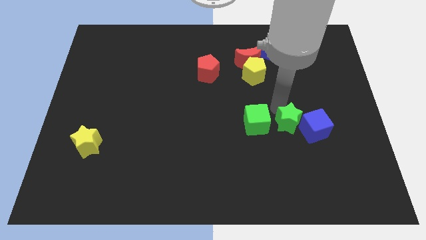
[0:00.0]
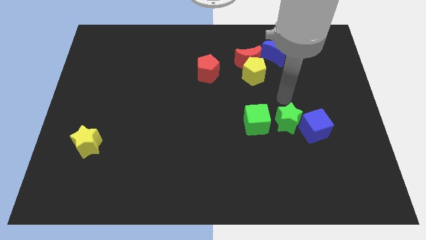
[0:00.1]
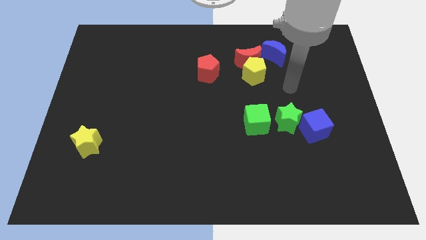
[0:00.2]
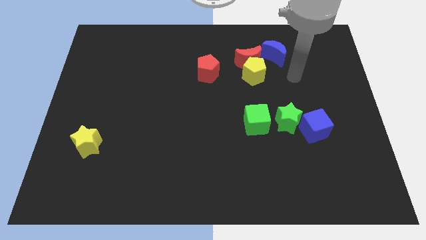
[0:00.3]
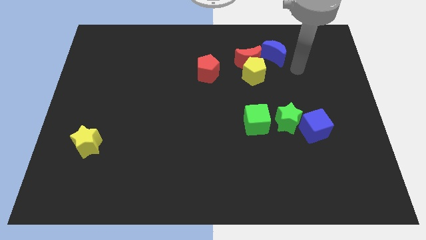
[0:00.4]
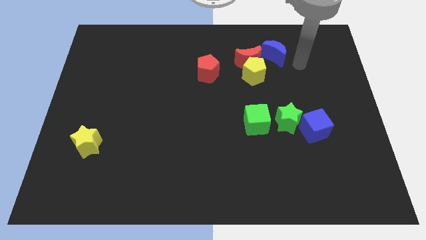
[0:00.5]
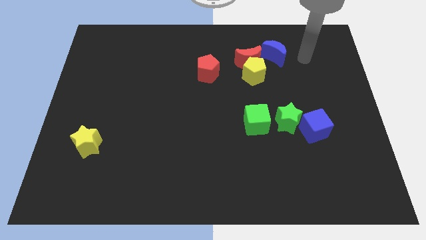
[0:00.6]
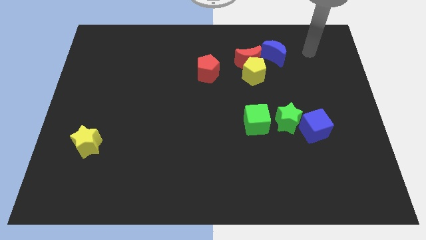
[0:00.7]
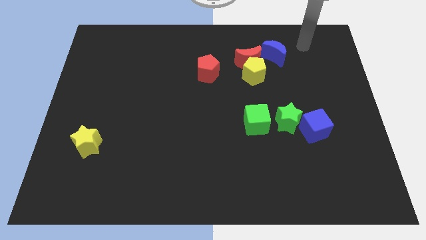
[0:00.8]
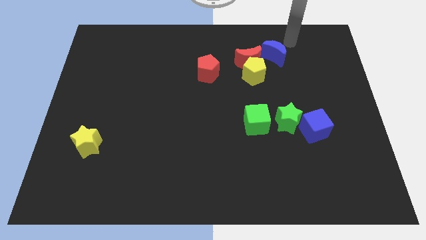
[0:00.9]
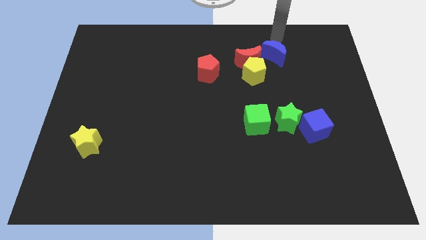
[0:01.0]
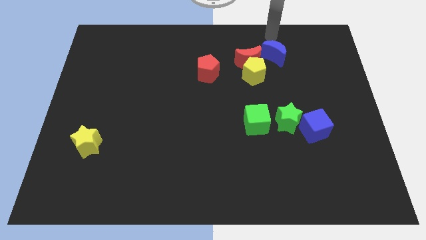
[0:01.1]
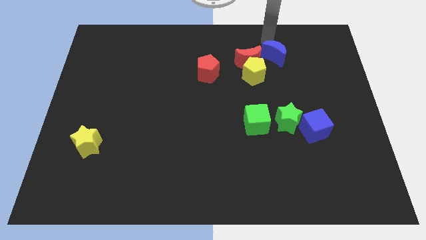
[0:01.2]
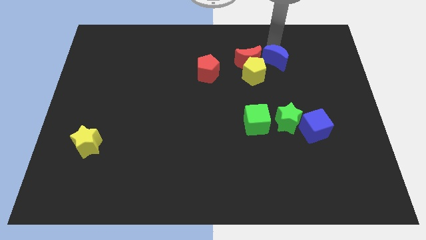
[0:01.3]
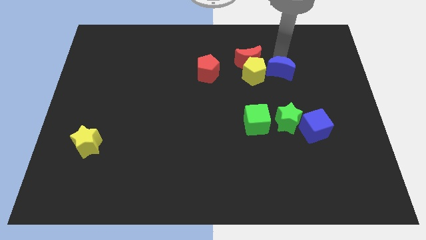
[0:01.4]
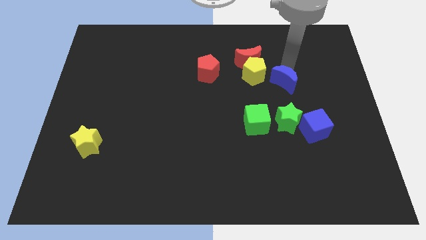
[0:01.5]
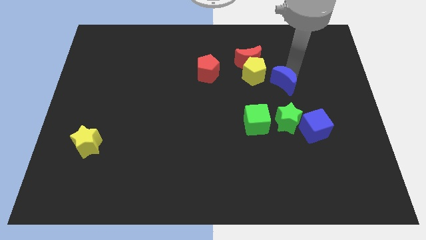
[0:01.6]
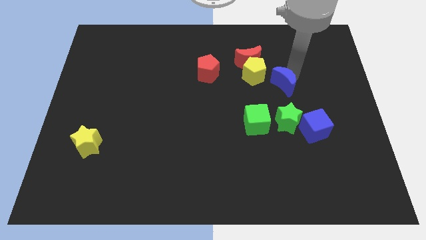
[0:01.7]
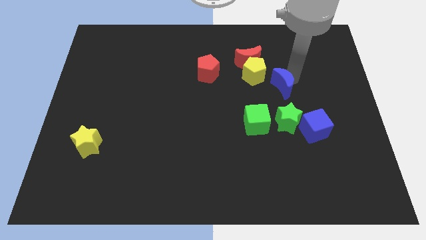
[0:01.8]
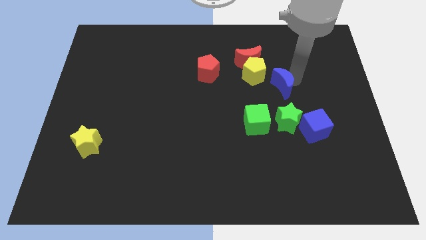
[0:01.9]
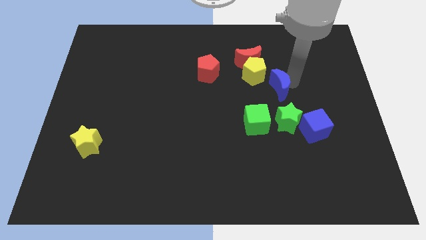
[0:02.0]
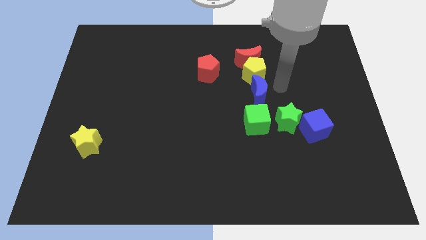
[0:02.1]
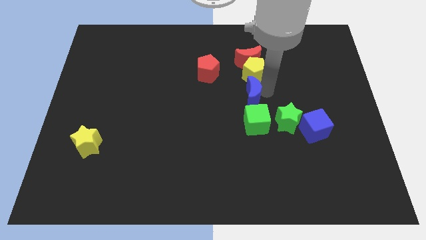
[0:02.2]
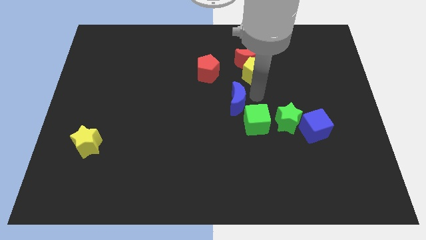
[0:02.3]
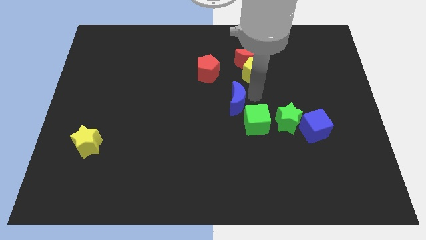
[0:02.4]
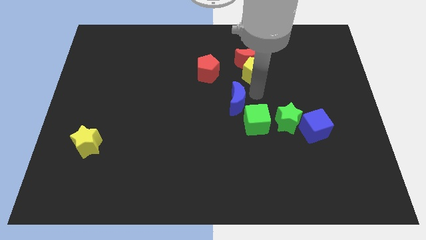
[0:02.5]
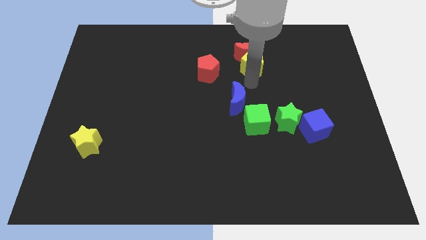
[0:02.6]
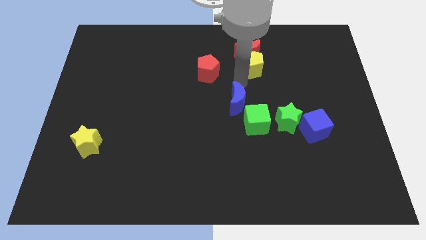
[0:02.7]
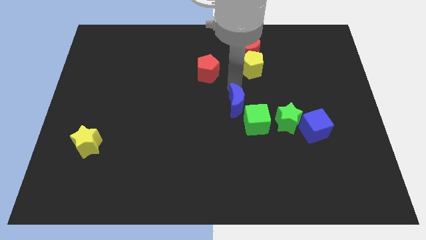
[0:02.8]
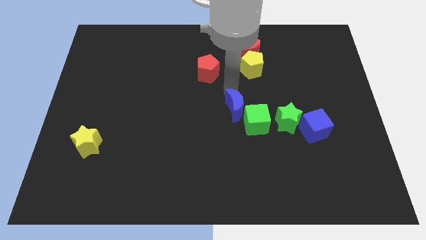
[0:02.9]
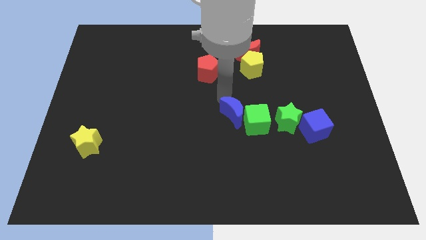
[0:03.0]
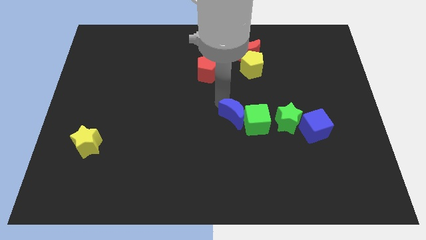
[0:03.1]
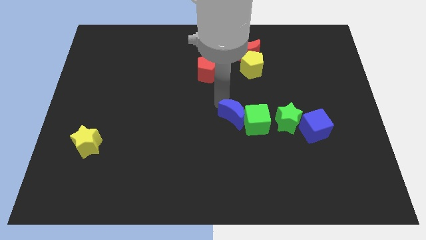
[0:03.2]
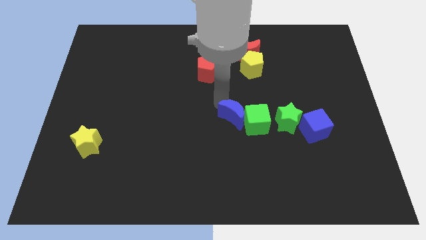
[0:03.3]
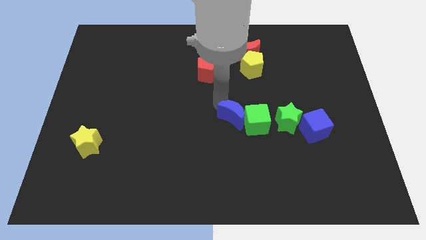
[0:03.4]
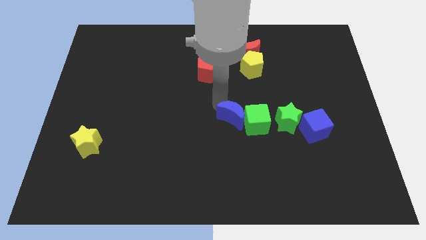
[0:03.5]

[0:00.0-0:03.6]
move the blue crescent left to the green cube

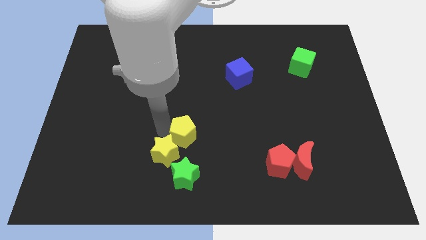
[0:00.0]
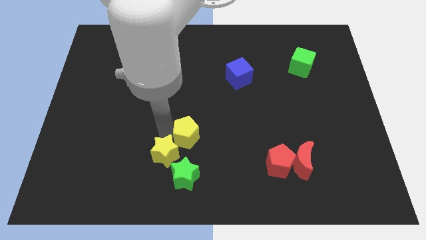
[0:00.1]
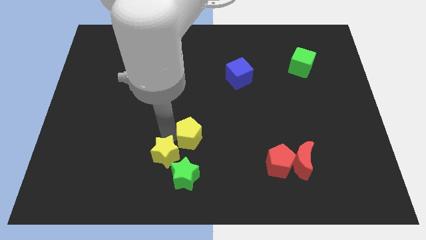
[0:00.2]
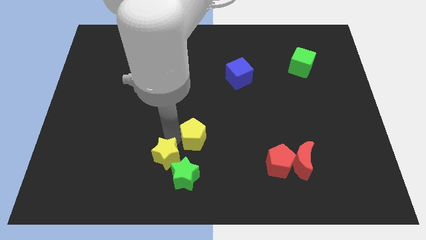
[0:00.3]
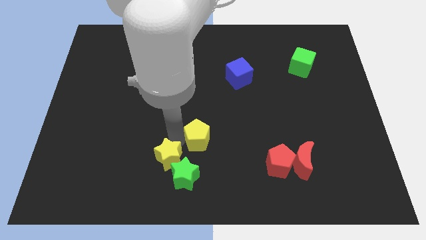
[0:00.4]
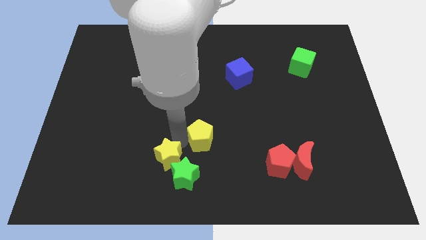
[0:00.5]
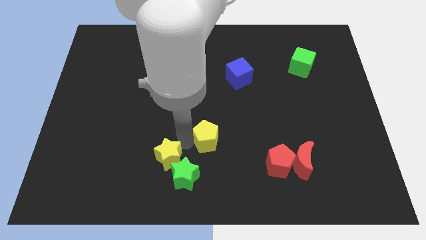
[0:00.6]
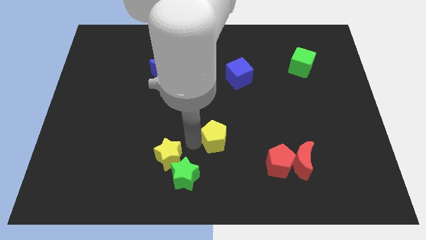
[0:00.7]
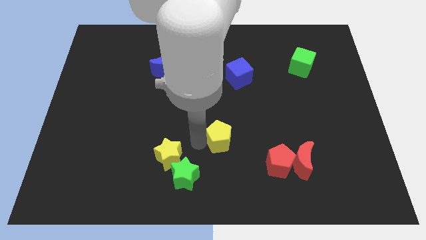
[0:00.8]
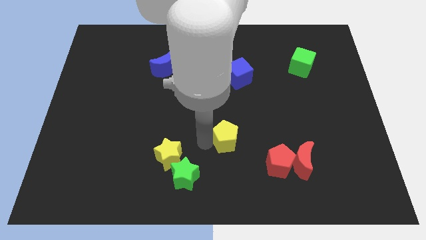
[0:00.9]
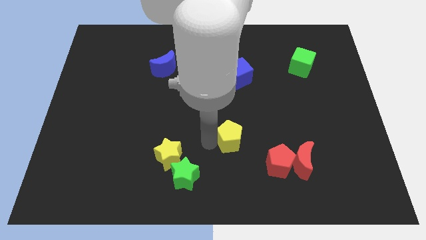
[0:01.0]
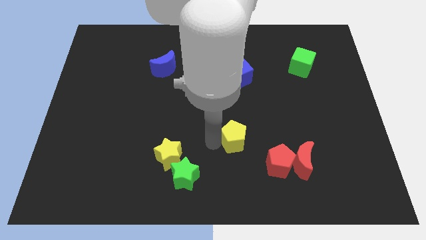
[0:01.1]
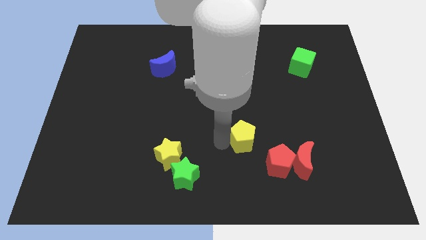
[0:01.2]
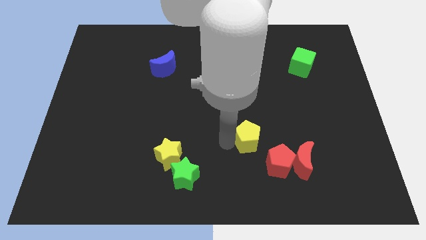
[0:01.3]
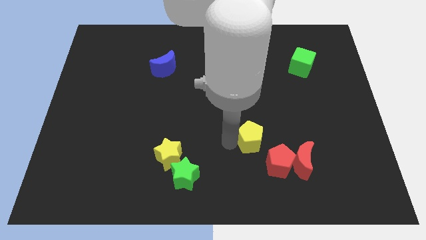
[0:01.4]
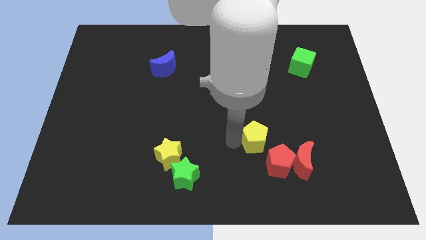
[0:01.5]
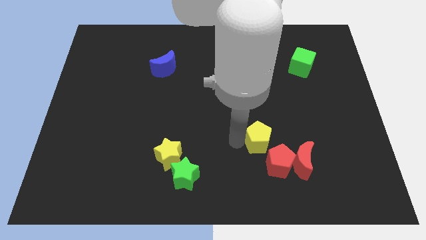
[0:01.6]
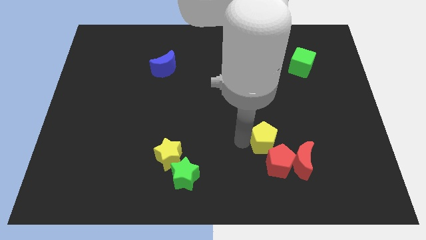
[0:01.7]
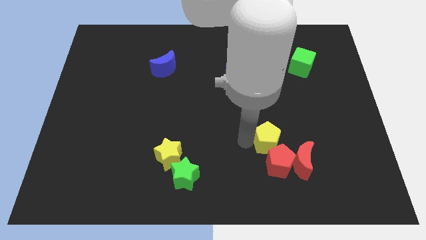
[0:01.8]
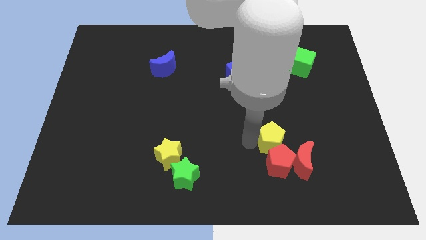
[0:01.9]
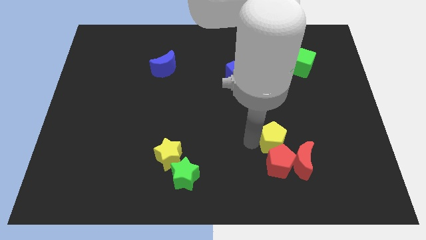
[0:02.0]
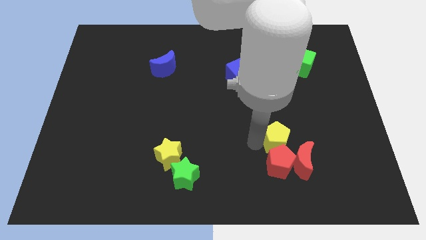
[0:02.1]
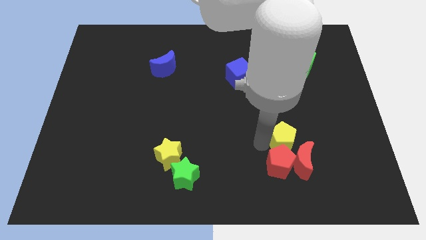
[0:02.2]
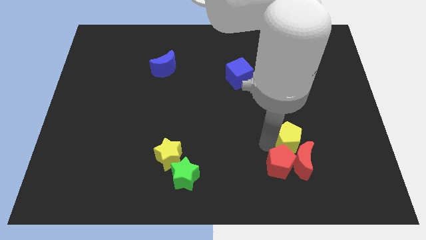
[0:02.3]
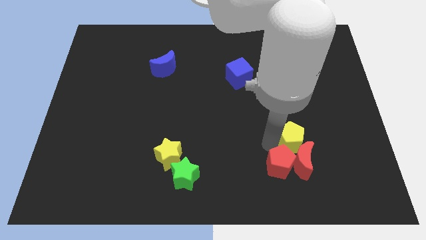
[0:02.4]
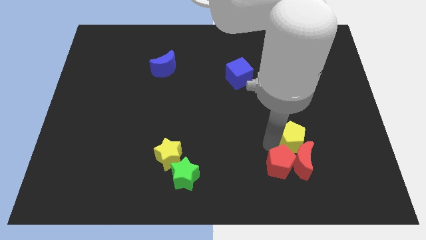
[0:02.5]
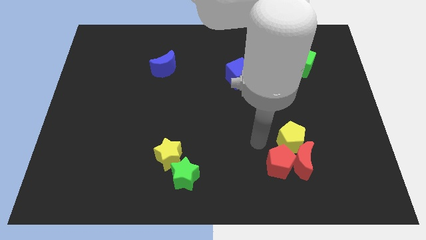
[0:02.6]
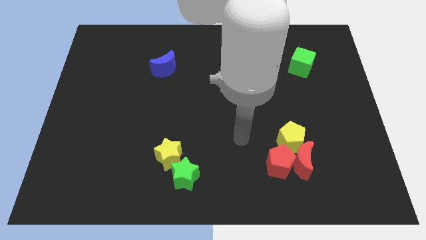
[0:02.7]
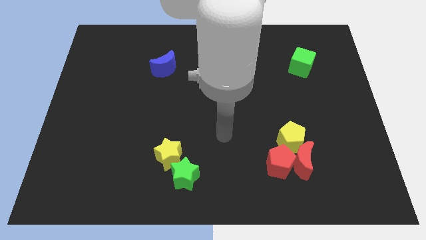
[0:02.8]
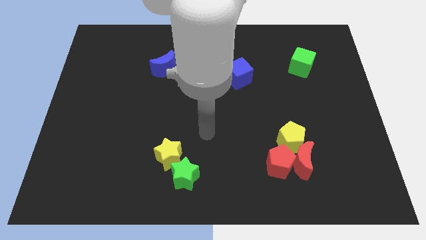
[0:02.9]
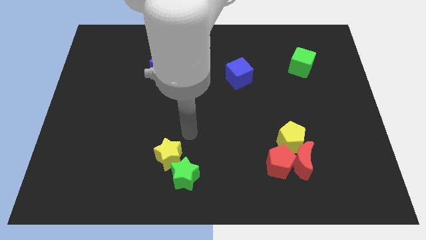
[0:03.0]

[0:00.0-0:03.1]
push the yellow pentagon to the top of the red blocks

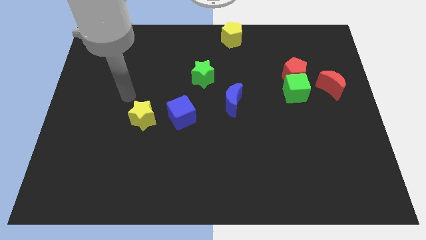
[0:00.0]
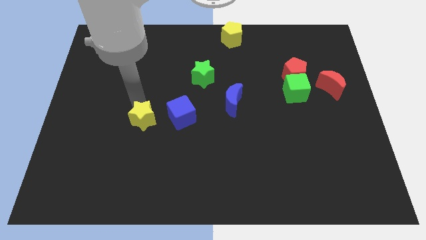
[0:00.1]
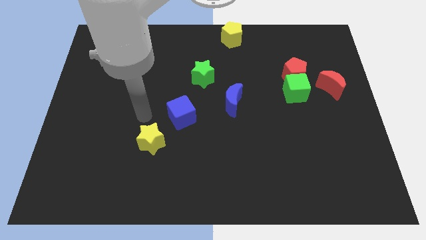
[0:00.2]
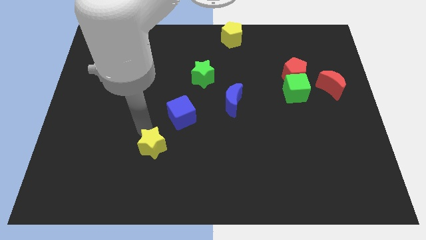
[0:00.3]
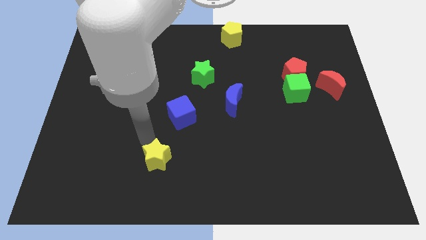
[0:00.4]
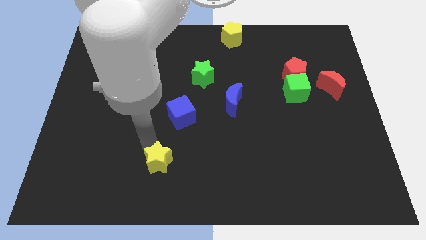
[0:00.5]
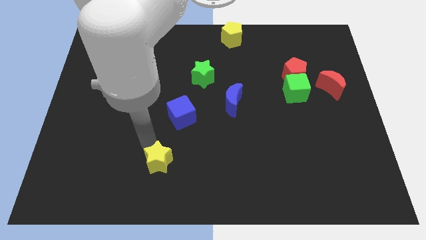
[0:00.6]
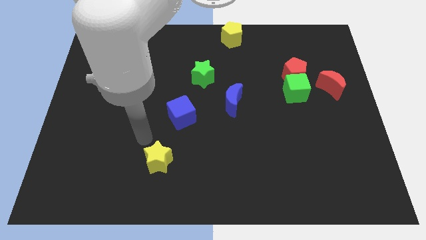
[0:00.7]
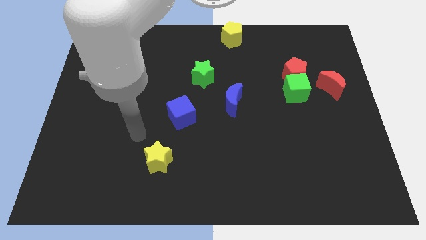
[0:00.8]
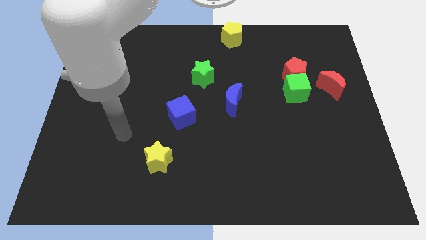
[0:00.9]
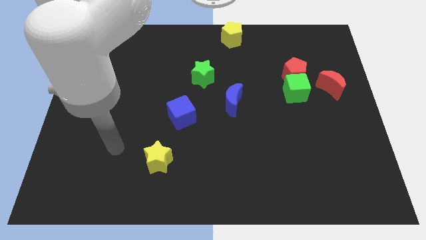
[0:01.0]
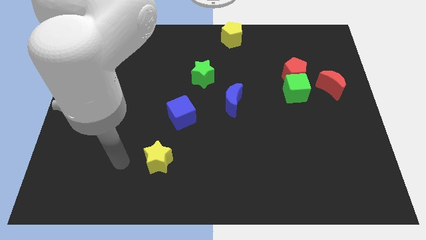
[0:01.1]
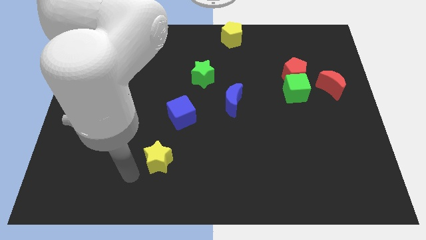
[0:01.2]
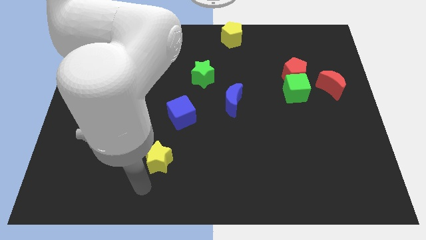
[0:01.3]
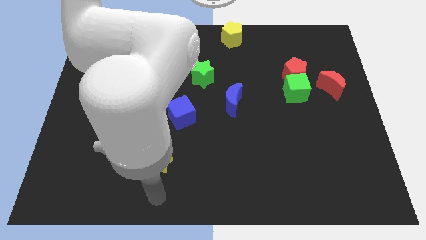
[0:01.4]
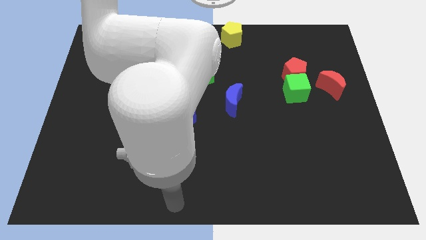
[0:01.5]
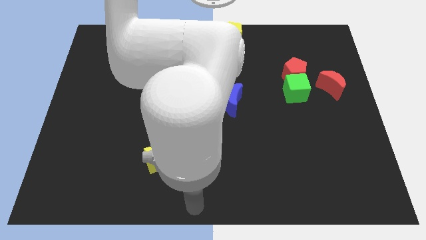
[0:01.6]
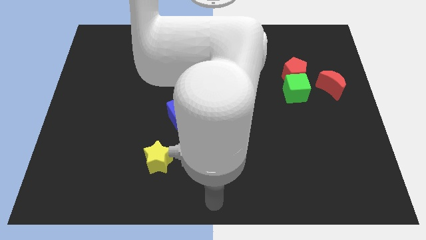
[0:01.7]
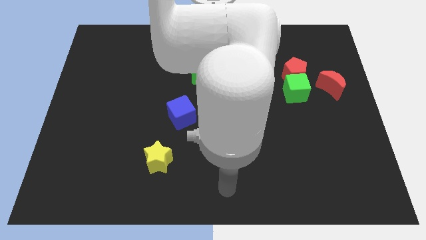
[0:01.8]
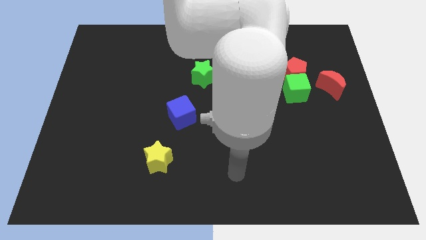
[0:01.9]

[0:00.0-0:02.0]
push the yellow star towards the bottom side

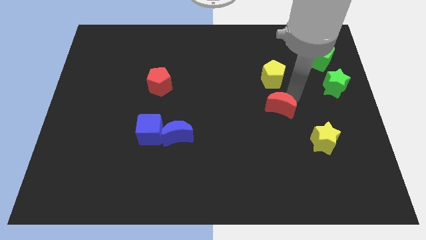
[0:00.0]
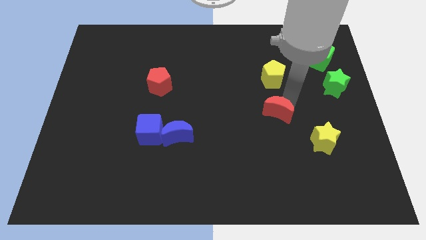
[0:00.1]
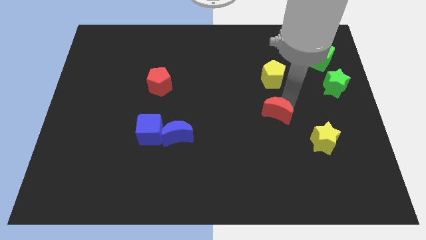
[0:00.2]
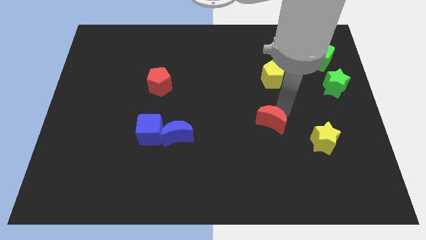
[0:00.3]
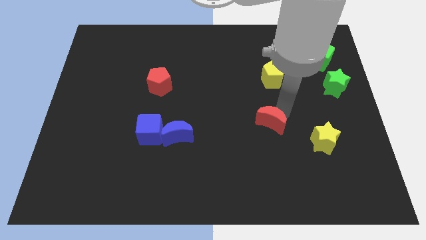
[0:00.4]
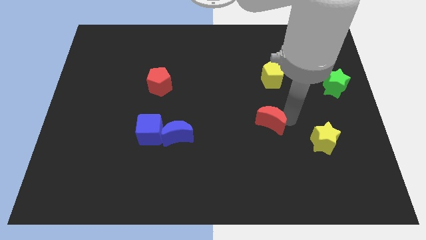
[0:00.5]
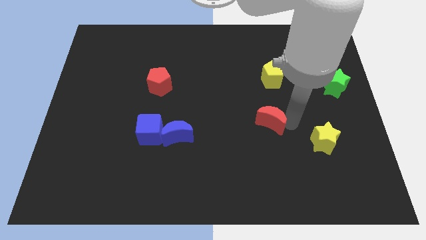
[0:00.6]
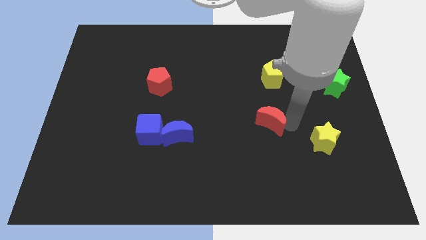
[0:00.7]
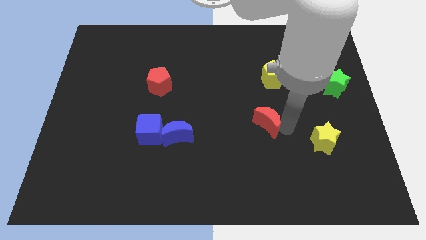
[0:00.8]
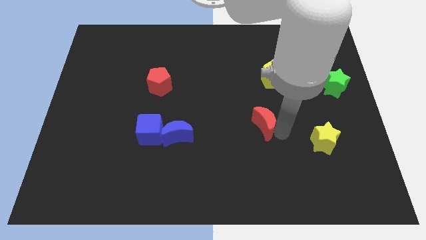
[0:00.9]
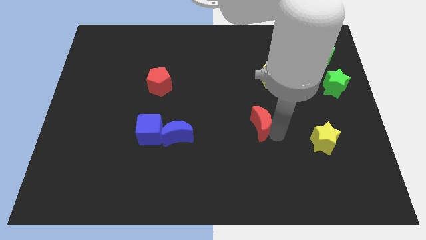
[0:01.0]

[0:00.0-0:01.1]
put the red moon diagonally bottom left to the yellow pentagon
